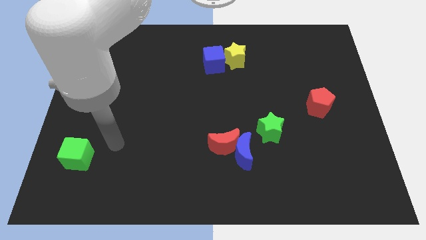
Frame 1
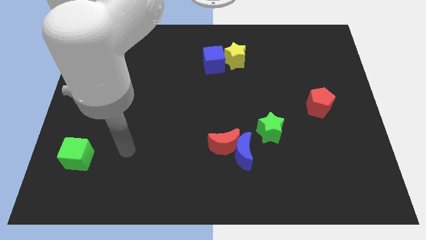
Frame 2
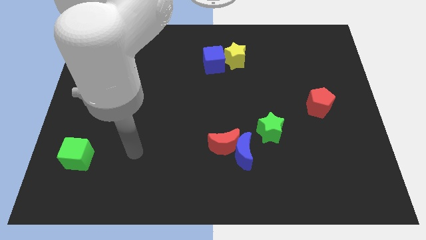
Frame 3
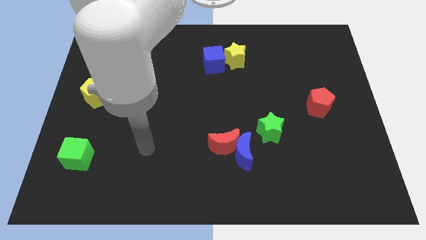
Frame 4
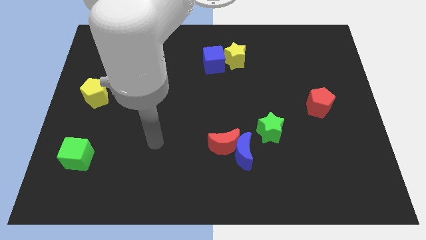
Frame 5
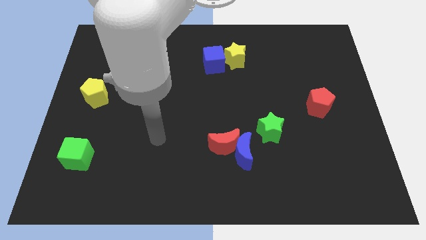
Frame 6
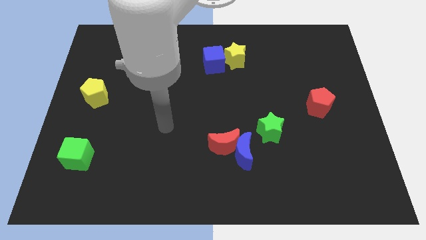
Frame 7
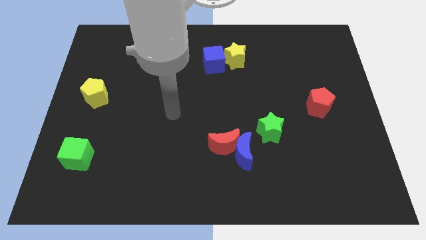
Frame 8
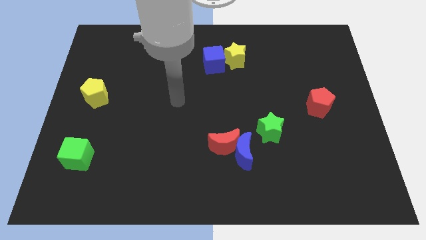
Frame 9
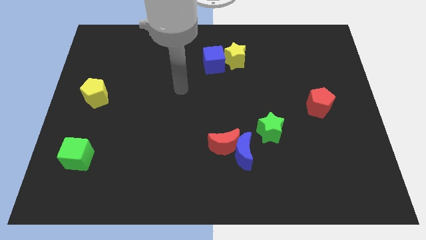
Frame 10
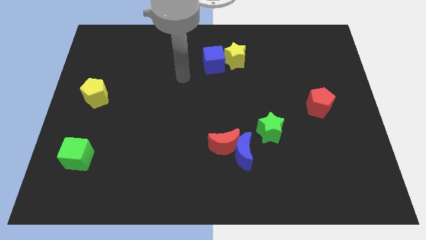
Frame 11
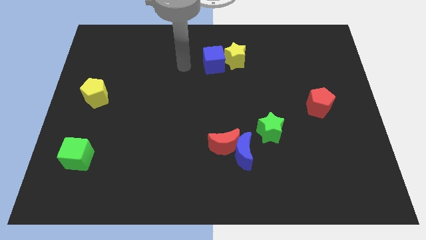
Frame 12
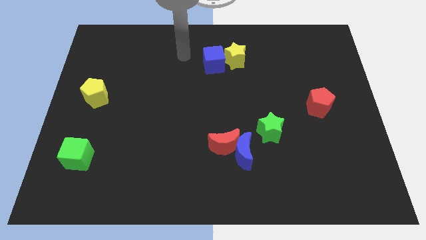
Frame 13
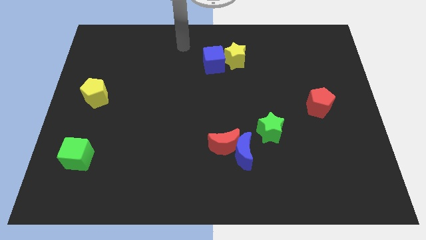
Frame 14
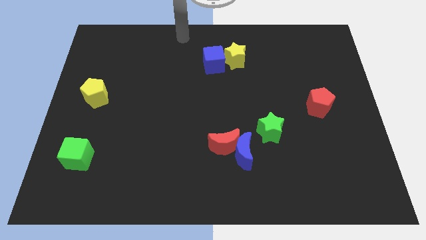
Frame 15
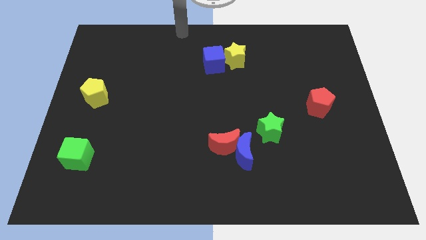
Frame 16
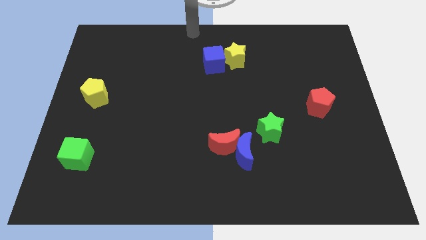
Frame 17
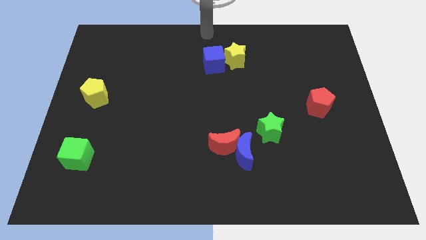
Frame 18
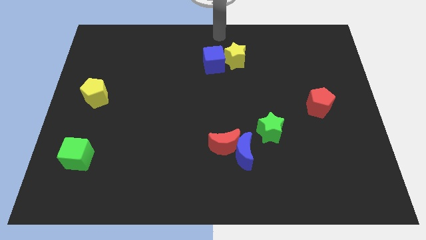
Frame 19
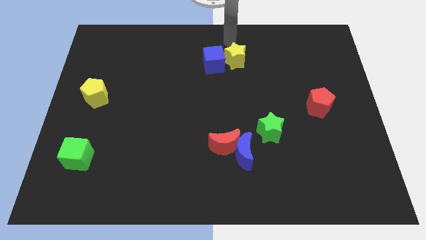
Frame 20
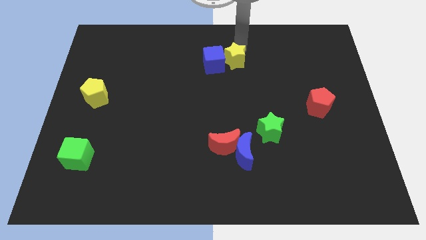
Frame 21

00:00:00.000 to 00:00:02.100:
slide your arm to the top right of yellow star

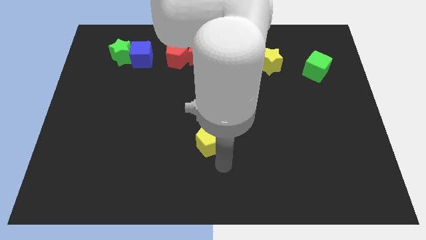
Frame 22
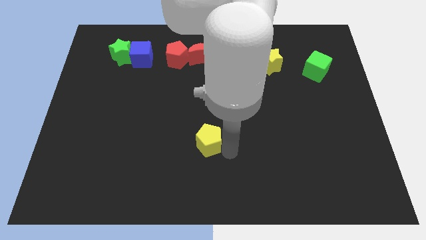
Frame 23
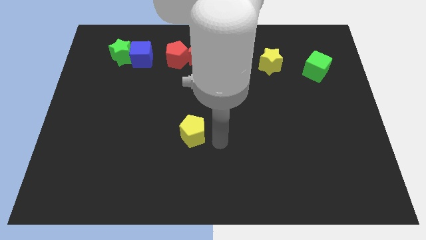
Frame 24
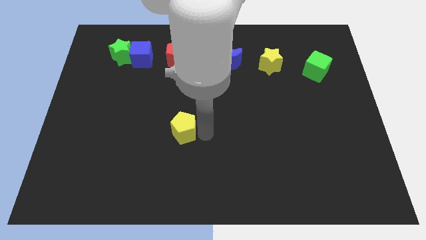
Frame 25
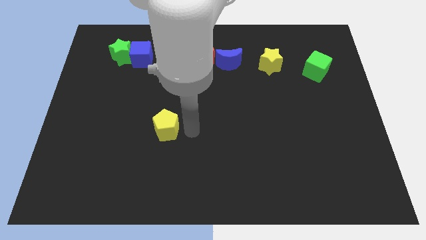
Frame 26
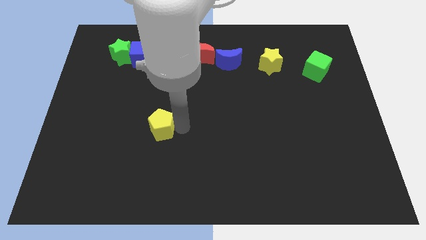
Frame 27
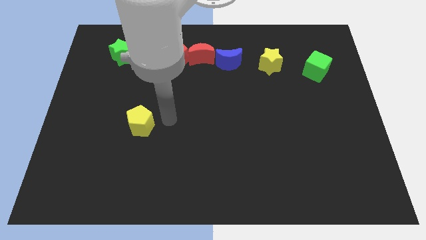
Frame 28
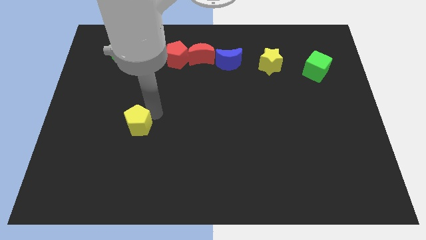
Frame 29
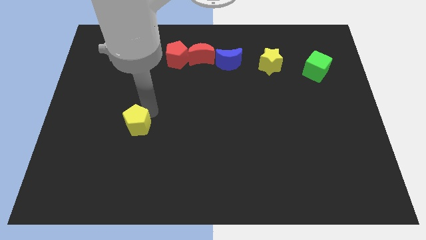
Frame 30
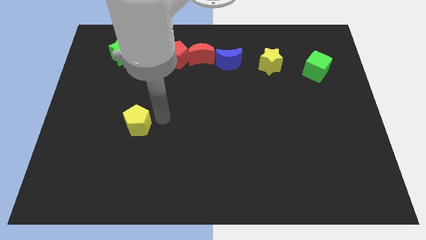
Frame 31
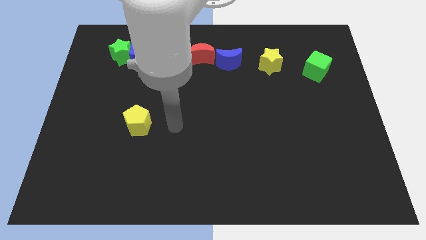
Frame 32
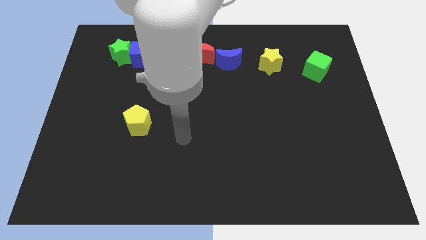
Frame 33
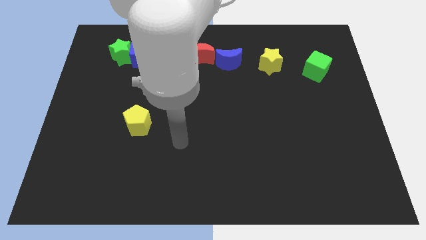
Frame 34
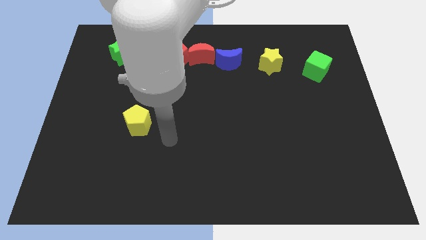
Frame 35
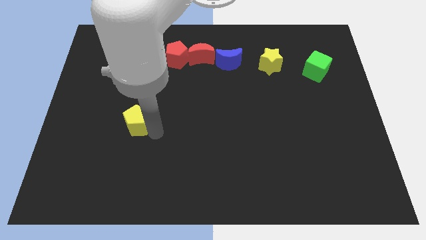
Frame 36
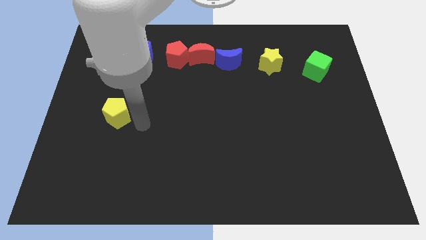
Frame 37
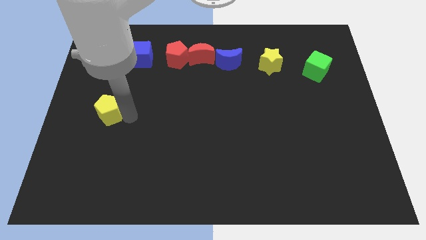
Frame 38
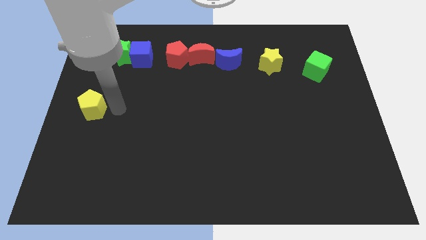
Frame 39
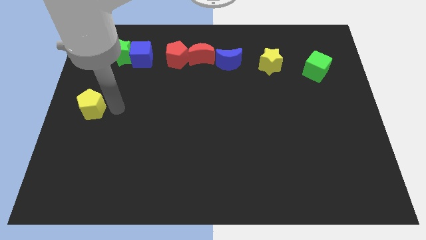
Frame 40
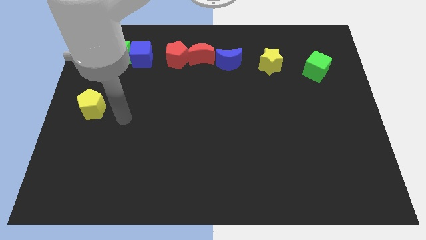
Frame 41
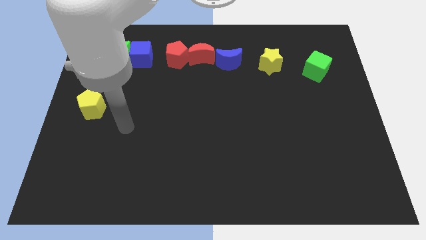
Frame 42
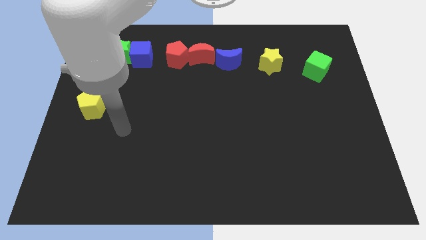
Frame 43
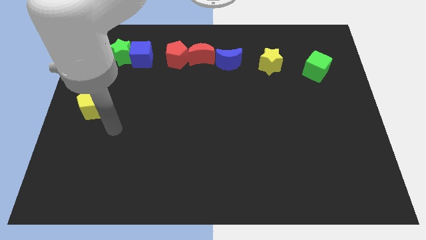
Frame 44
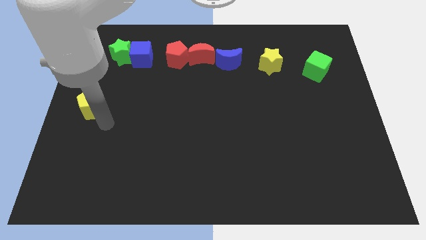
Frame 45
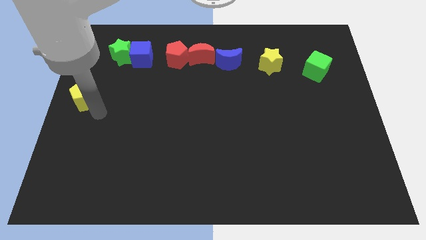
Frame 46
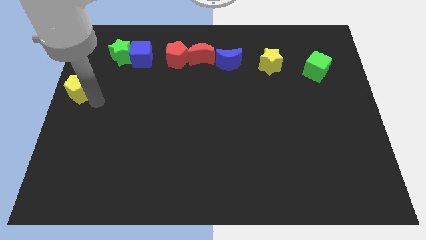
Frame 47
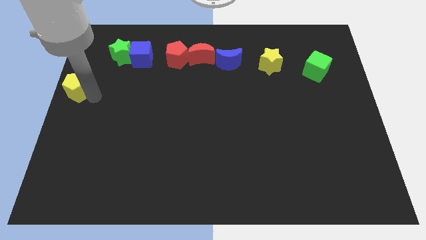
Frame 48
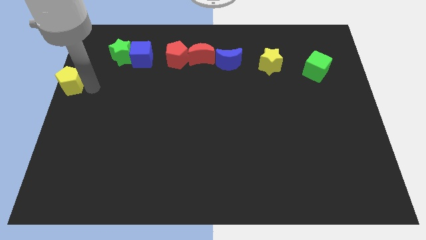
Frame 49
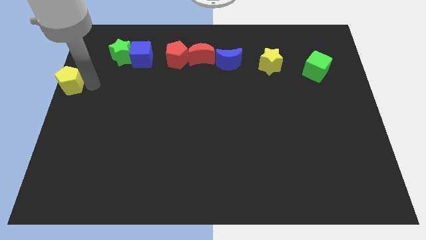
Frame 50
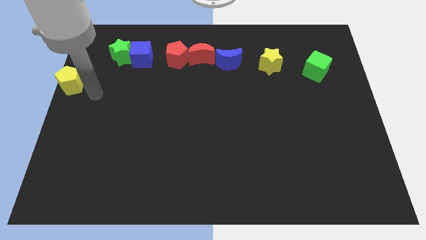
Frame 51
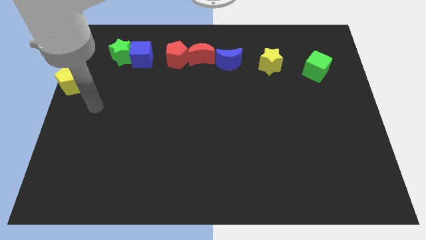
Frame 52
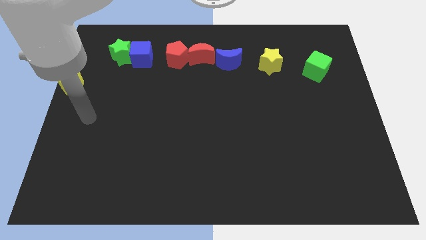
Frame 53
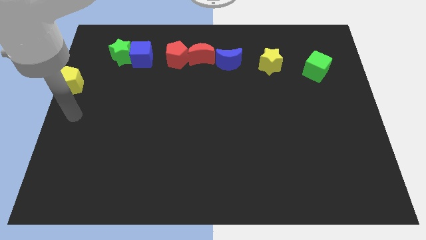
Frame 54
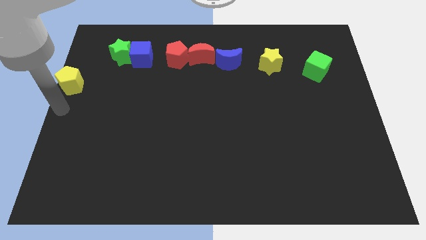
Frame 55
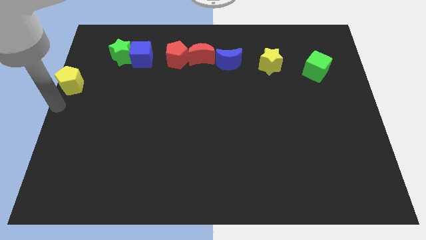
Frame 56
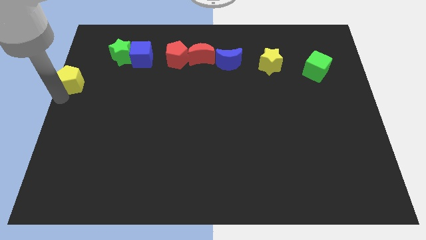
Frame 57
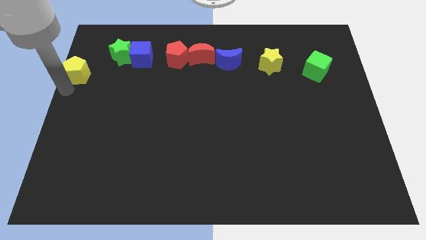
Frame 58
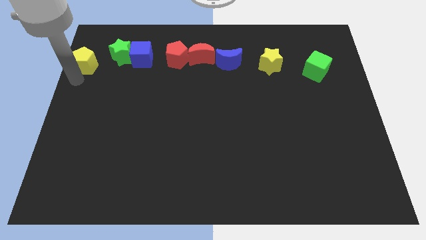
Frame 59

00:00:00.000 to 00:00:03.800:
push yellow pentagon to the bottom left of the green star

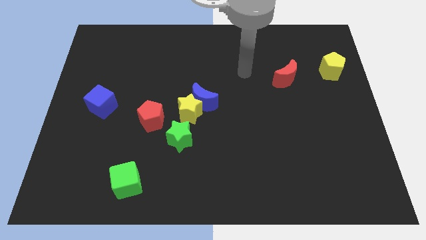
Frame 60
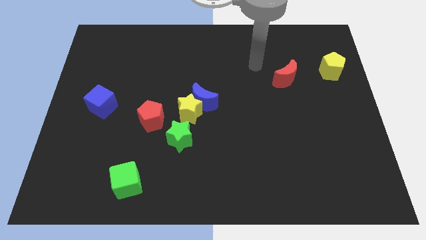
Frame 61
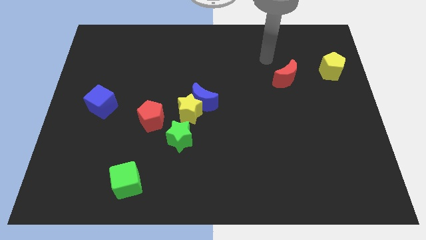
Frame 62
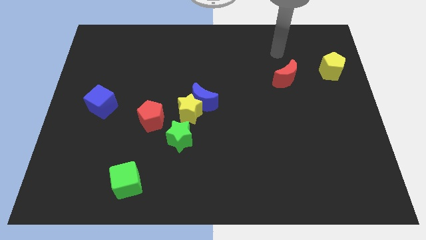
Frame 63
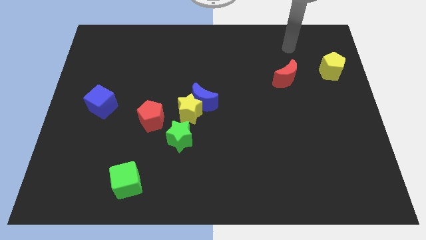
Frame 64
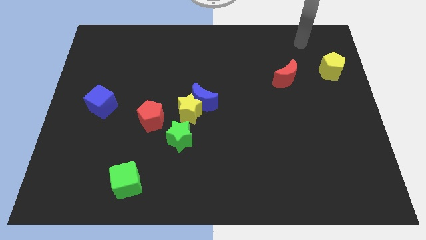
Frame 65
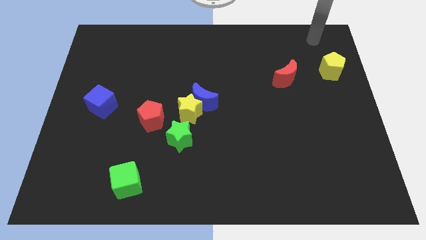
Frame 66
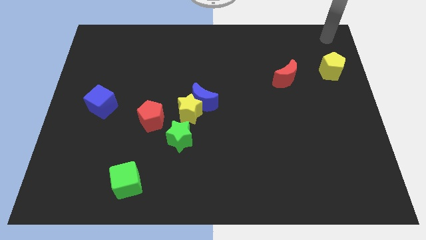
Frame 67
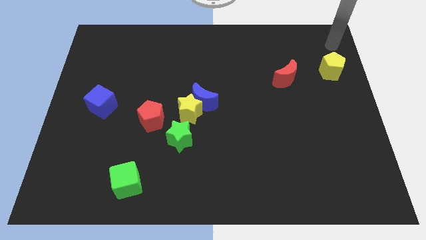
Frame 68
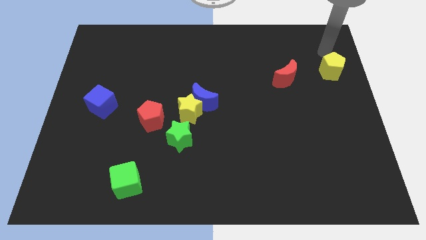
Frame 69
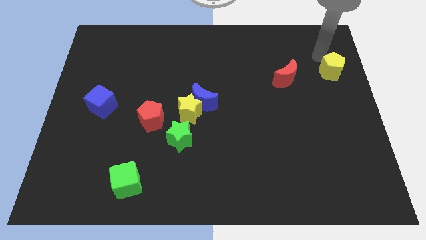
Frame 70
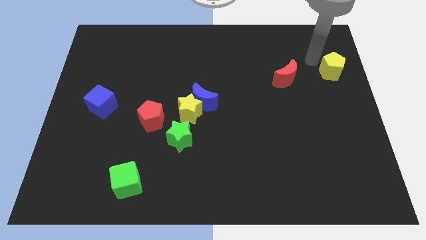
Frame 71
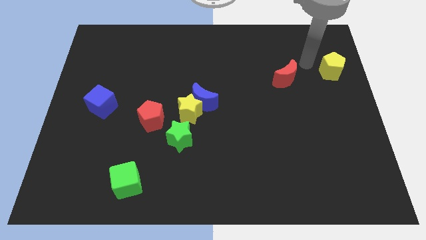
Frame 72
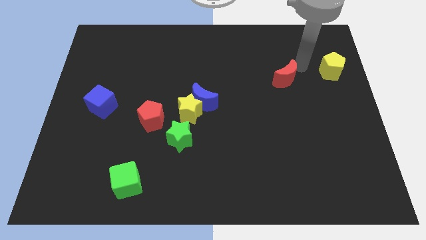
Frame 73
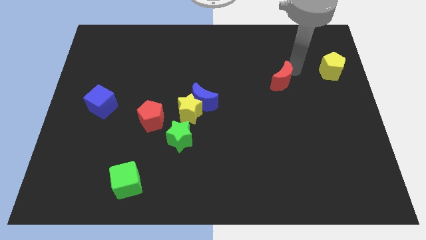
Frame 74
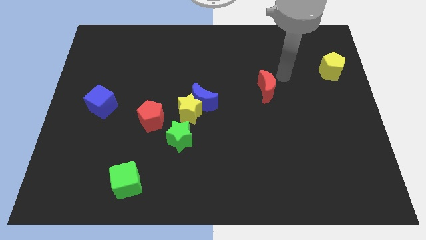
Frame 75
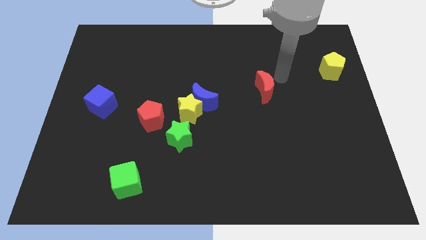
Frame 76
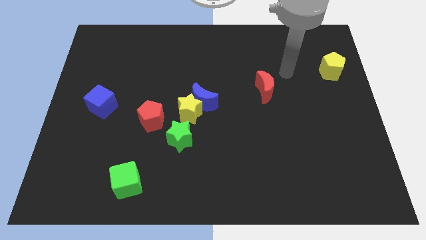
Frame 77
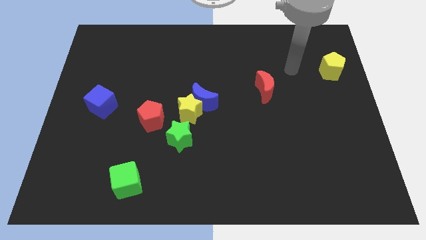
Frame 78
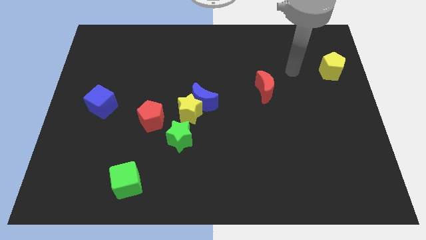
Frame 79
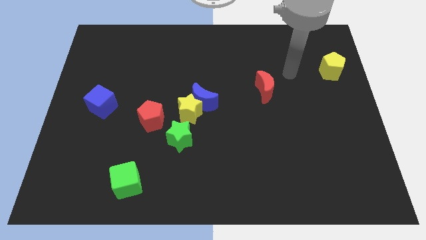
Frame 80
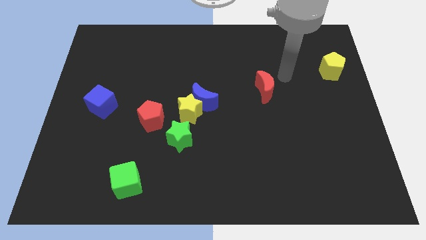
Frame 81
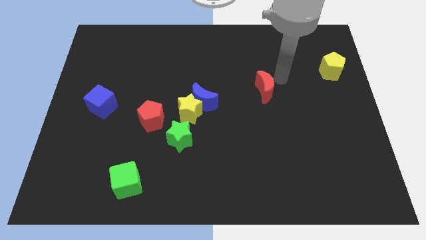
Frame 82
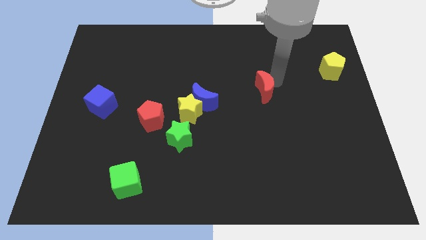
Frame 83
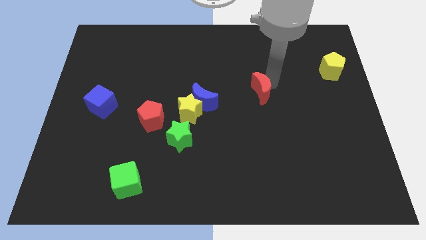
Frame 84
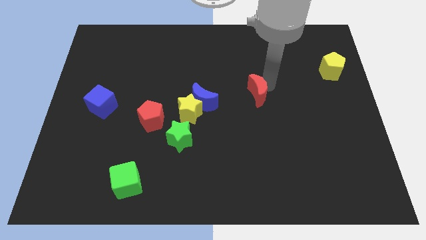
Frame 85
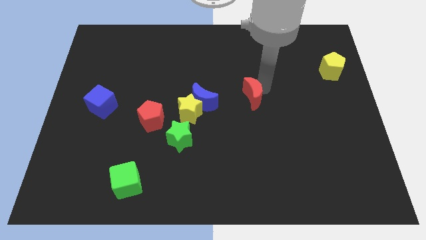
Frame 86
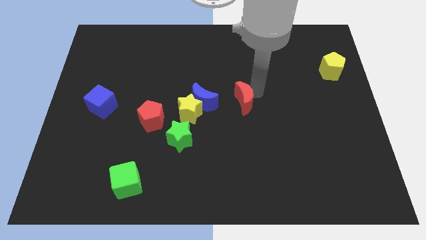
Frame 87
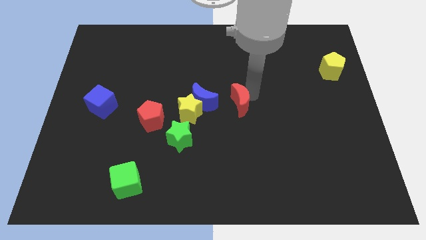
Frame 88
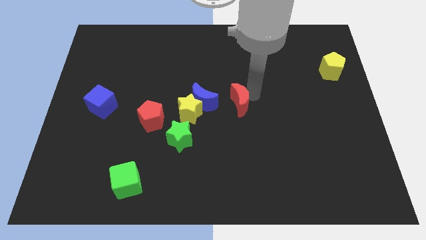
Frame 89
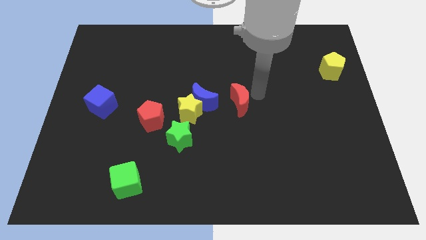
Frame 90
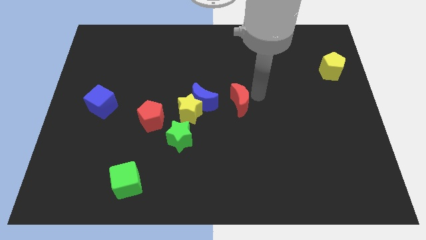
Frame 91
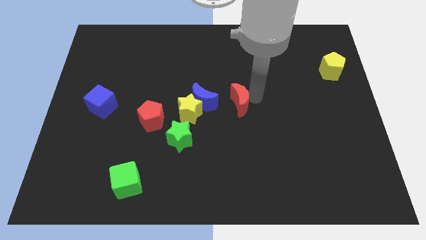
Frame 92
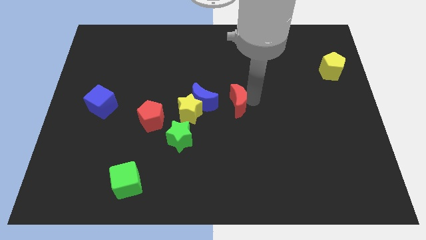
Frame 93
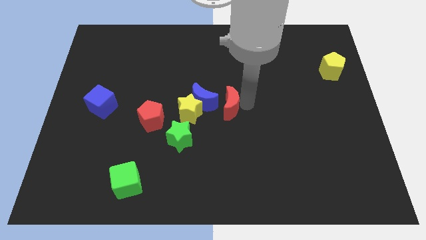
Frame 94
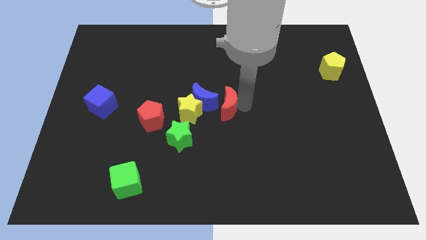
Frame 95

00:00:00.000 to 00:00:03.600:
move the red crescent to the right of the blue crescent
